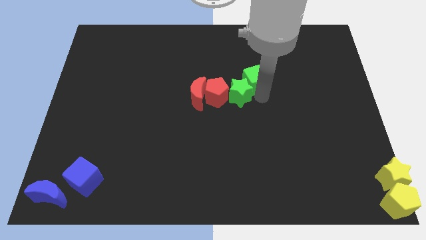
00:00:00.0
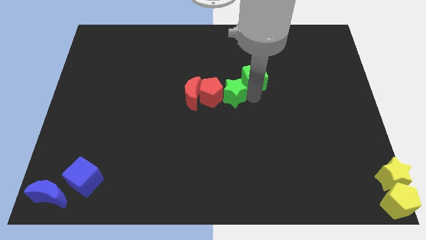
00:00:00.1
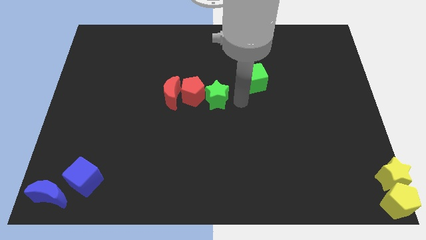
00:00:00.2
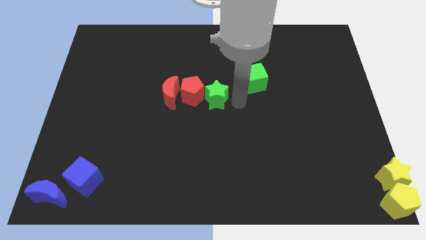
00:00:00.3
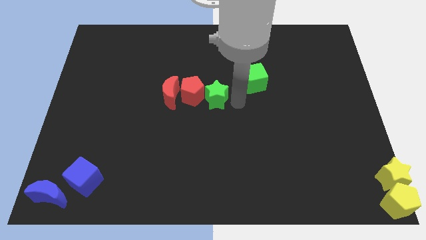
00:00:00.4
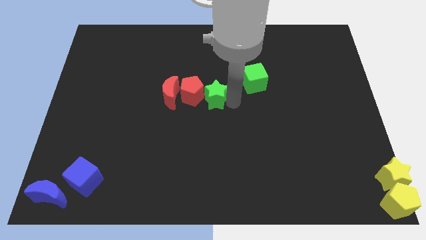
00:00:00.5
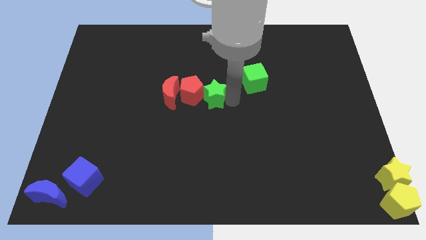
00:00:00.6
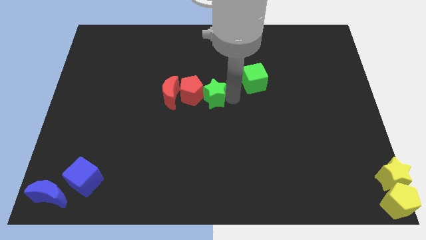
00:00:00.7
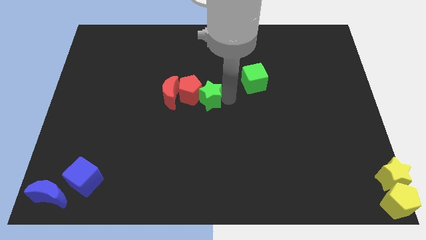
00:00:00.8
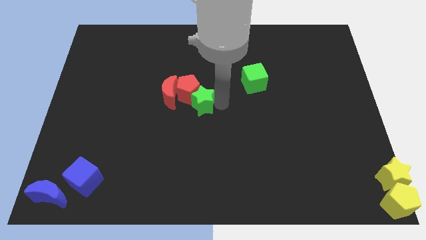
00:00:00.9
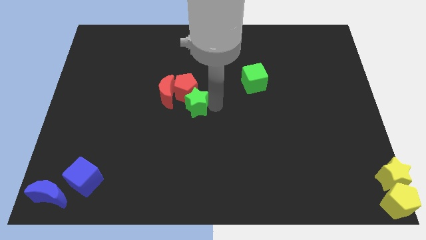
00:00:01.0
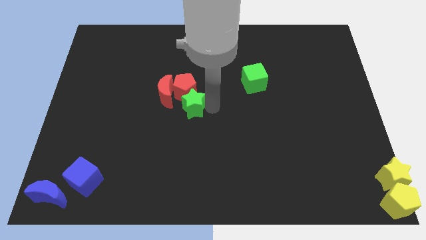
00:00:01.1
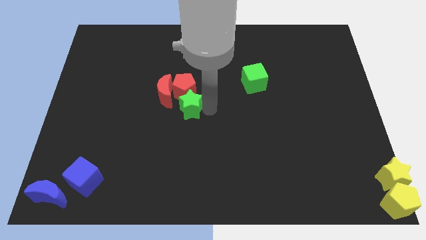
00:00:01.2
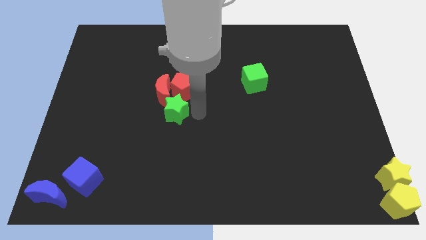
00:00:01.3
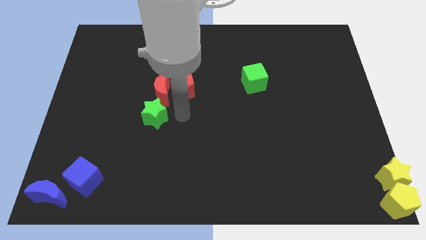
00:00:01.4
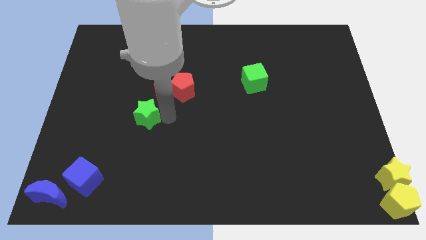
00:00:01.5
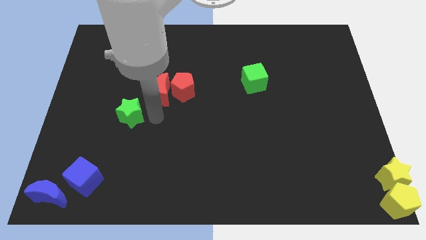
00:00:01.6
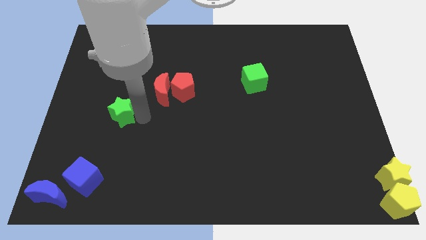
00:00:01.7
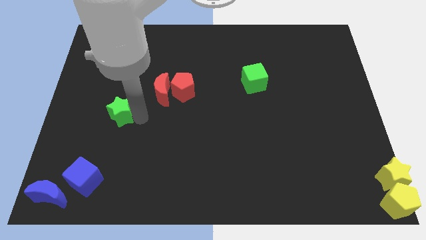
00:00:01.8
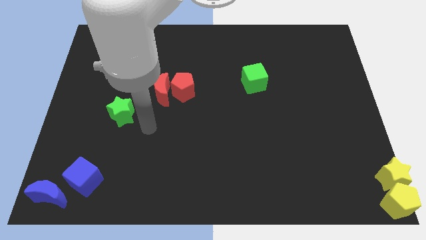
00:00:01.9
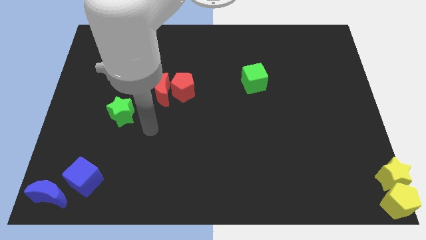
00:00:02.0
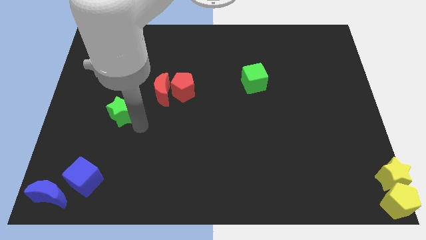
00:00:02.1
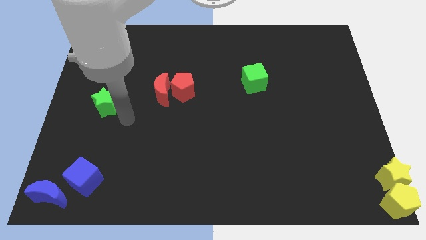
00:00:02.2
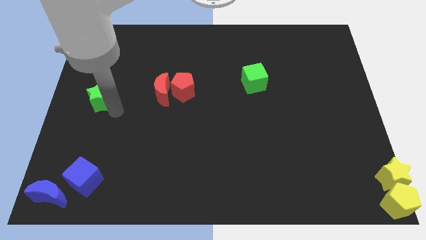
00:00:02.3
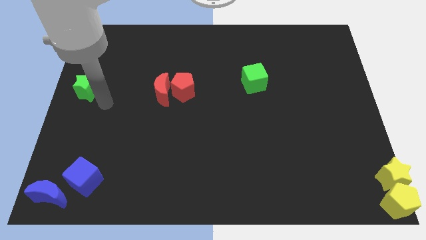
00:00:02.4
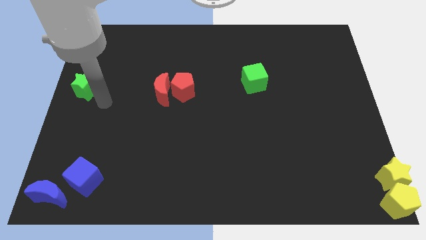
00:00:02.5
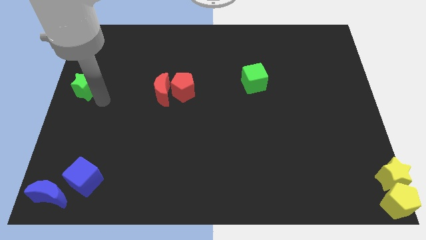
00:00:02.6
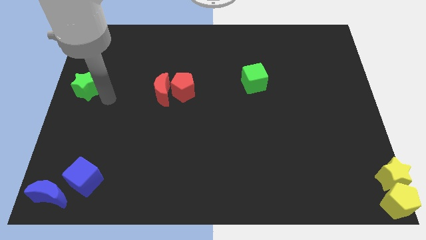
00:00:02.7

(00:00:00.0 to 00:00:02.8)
move green star towards middle center left of the board

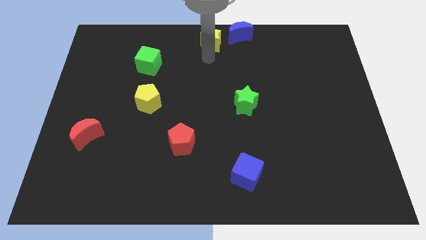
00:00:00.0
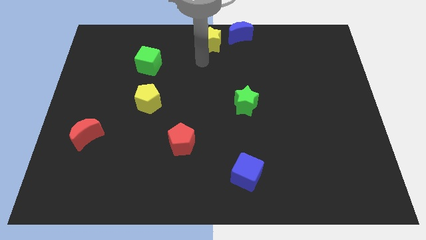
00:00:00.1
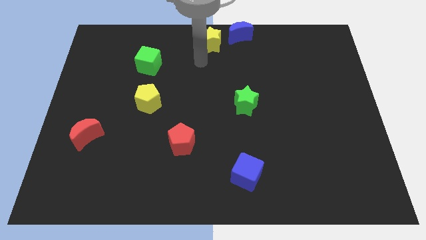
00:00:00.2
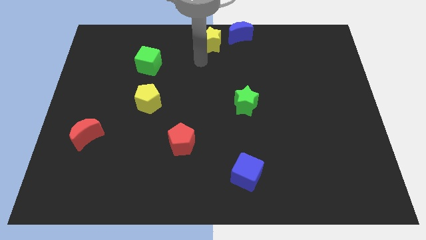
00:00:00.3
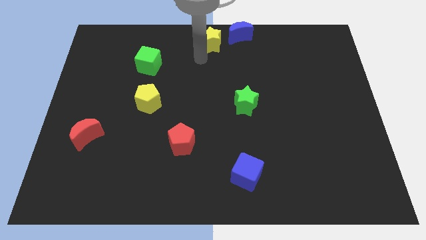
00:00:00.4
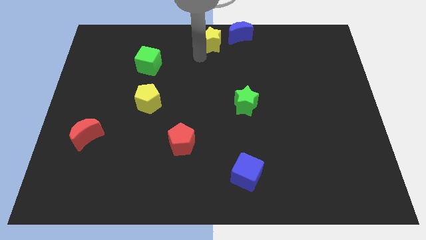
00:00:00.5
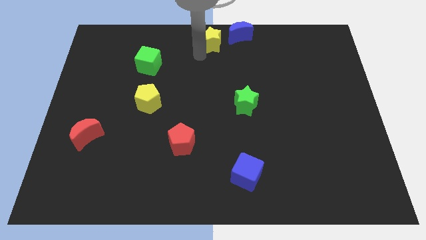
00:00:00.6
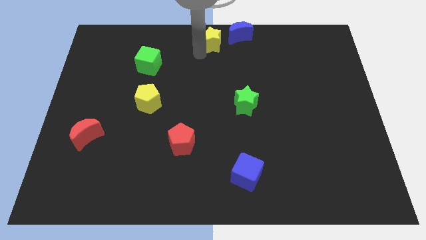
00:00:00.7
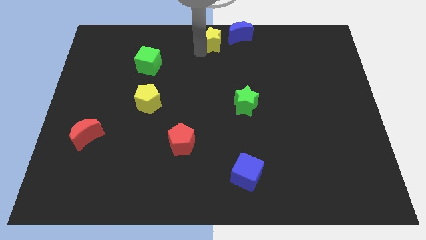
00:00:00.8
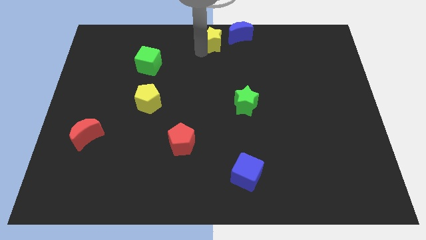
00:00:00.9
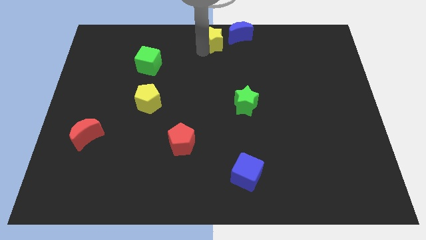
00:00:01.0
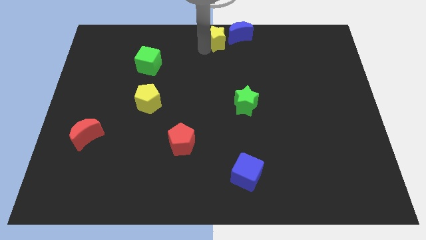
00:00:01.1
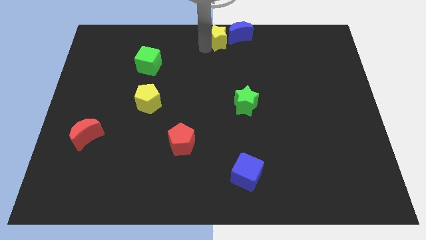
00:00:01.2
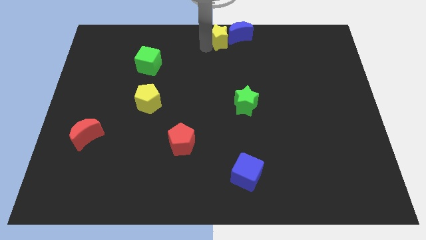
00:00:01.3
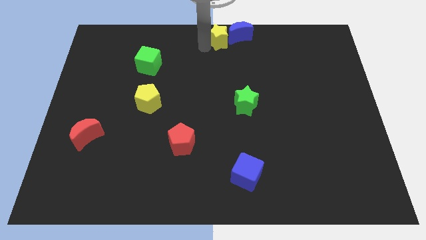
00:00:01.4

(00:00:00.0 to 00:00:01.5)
place yellow star close to blue moon

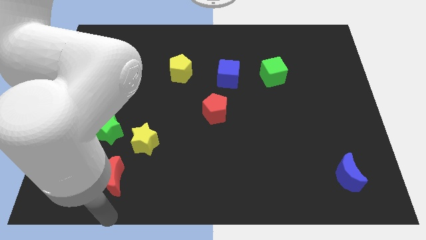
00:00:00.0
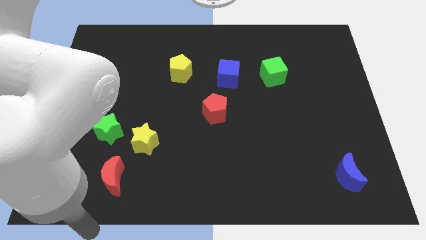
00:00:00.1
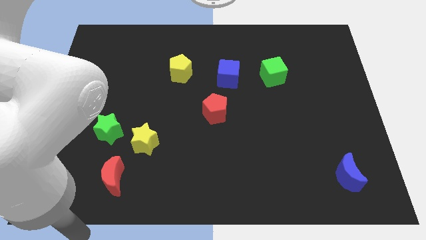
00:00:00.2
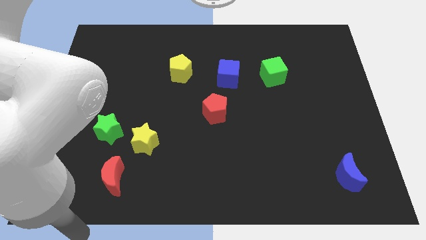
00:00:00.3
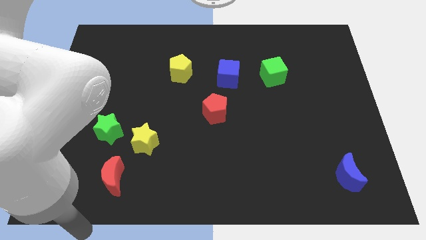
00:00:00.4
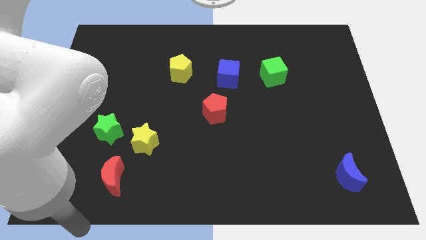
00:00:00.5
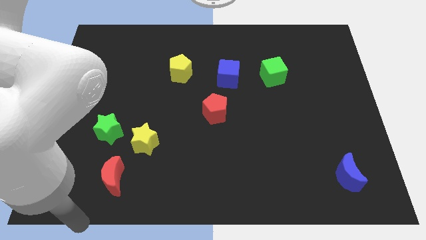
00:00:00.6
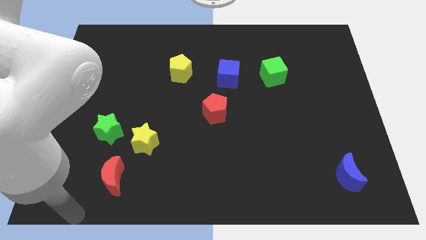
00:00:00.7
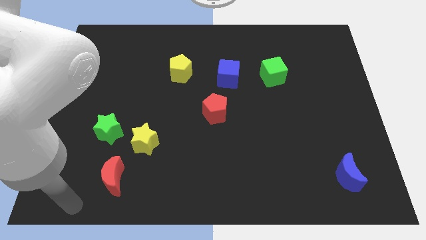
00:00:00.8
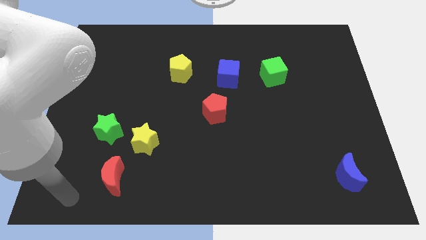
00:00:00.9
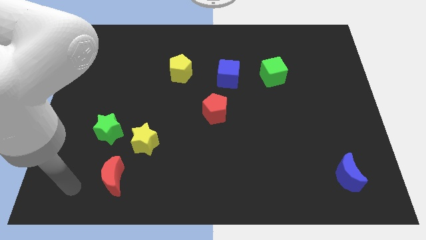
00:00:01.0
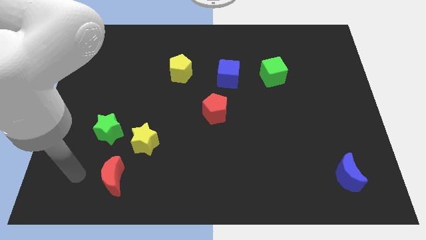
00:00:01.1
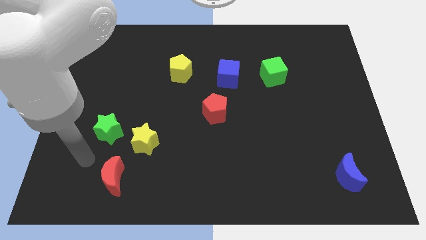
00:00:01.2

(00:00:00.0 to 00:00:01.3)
move the arm towards the green star

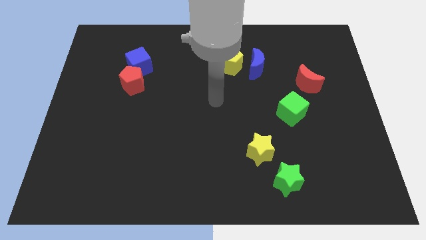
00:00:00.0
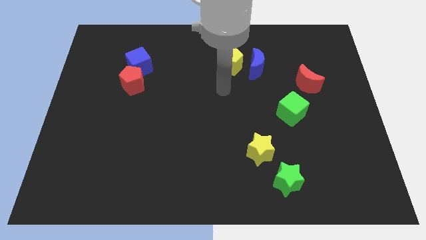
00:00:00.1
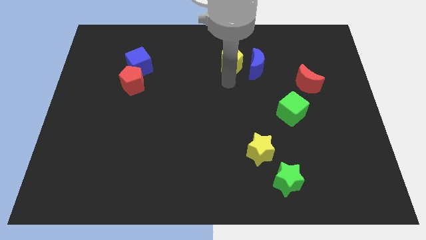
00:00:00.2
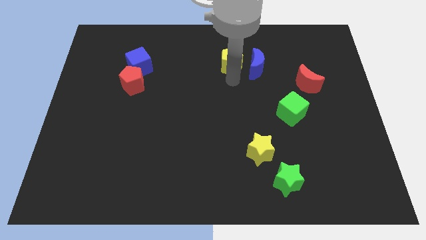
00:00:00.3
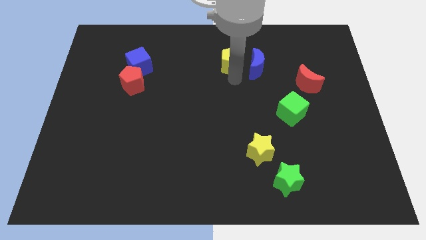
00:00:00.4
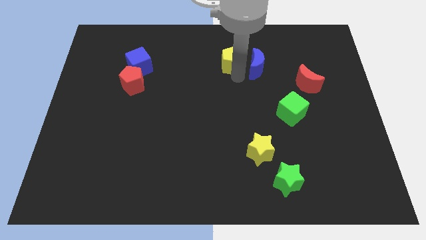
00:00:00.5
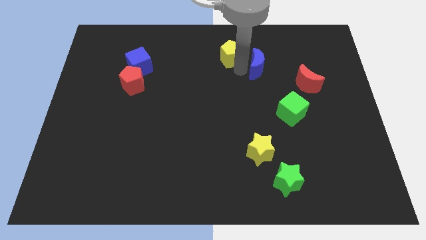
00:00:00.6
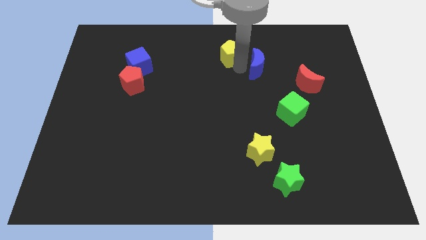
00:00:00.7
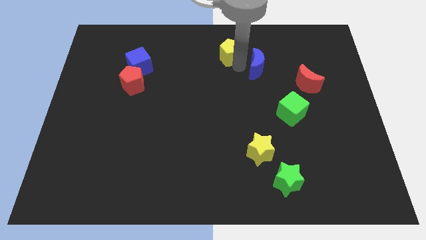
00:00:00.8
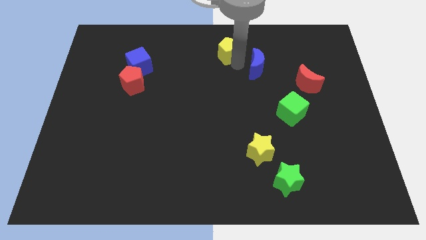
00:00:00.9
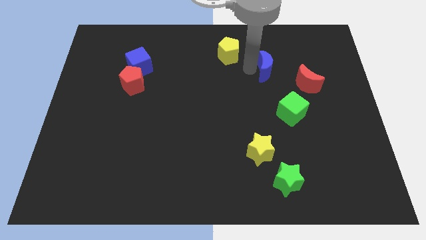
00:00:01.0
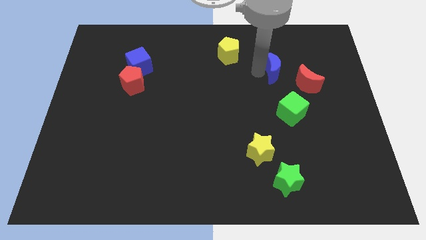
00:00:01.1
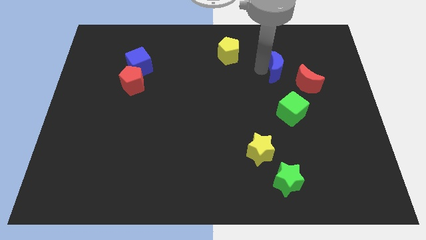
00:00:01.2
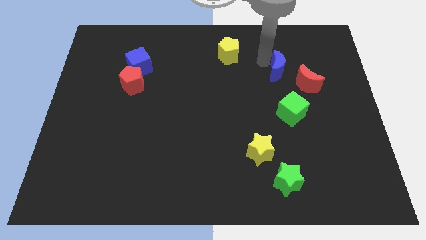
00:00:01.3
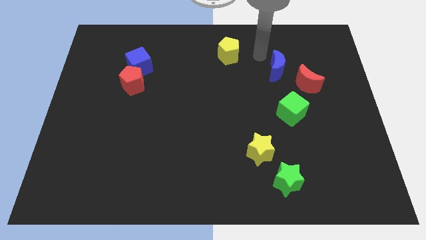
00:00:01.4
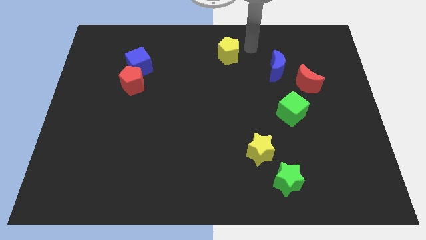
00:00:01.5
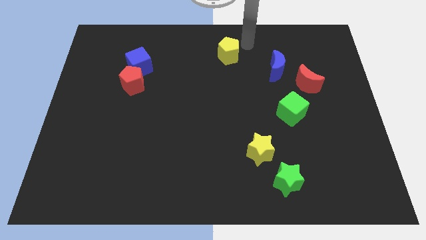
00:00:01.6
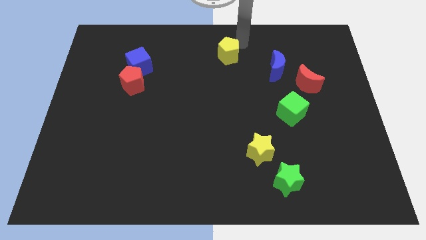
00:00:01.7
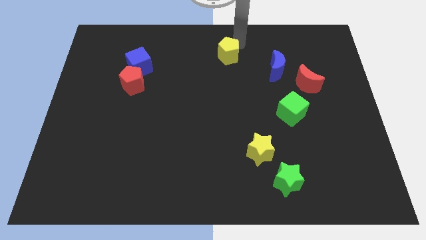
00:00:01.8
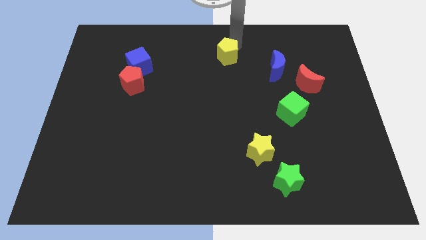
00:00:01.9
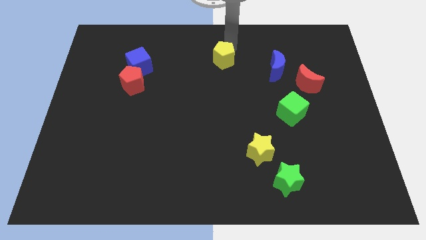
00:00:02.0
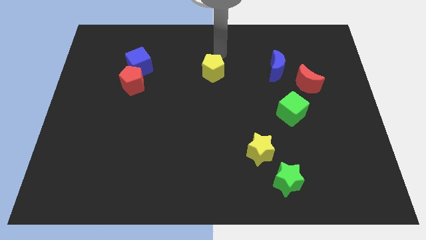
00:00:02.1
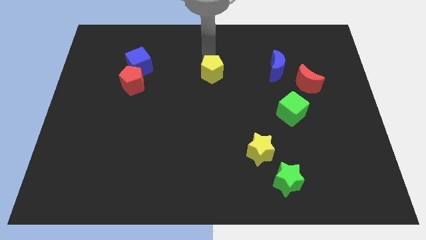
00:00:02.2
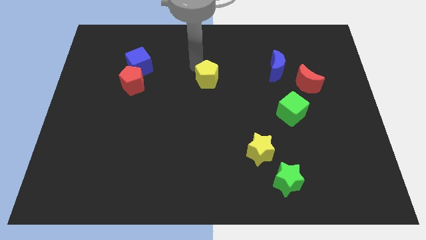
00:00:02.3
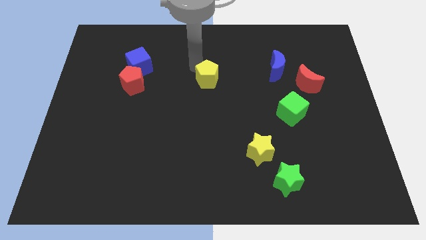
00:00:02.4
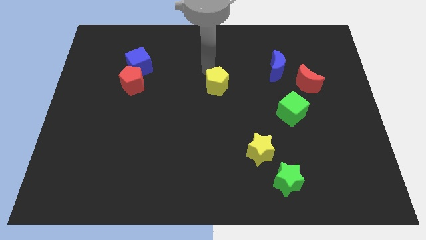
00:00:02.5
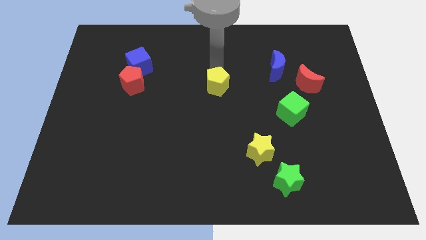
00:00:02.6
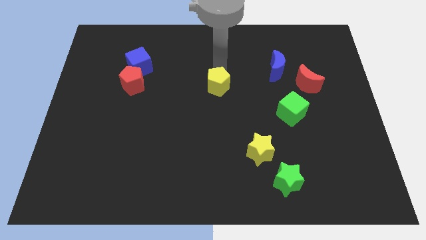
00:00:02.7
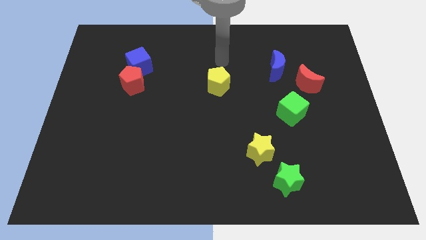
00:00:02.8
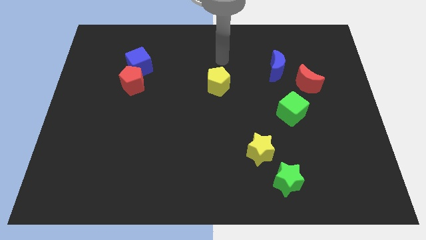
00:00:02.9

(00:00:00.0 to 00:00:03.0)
place the yellow pentagon right to the red pentagon

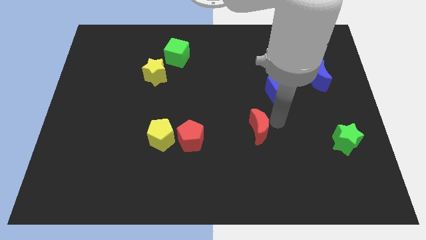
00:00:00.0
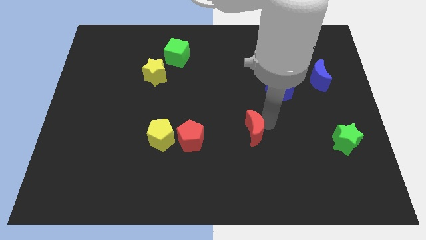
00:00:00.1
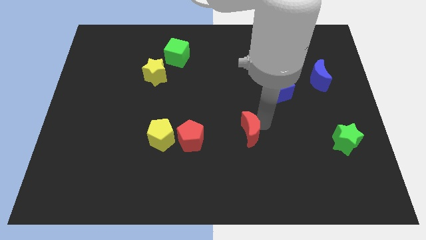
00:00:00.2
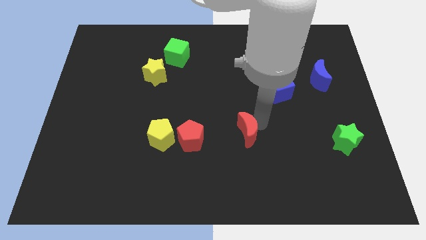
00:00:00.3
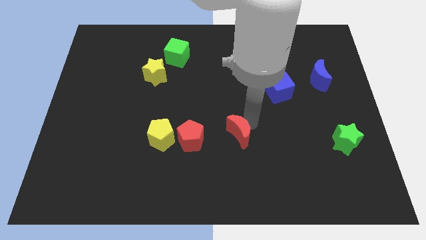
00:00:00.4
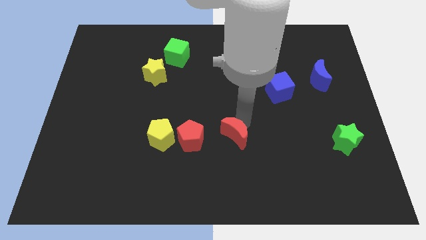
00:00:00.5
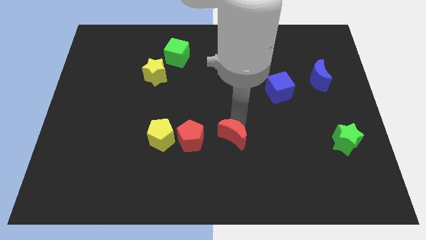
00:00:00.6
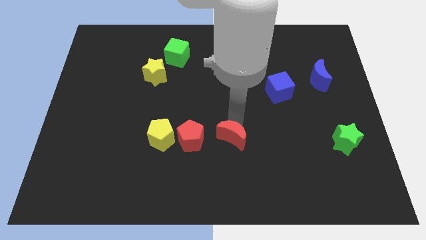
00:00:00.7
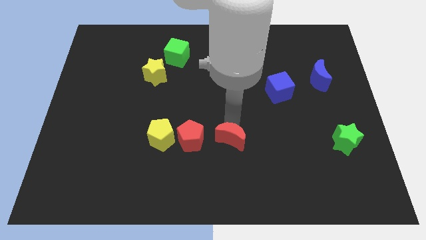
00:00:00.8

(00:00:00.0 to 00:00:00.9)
place the red crescent diagonal to the right side of the red pentagon
